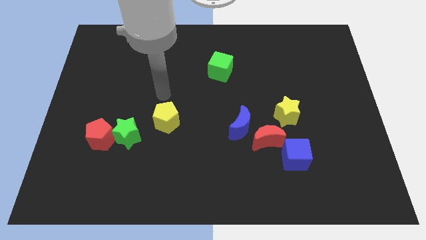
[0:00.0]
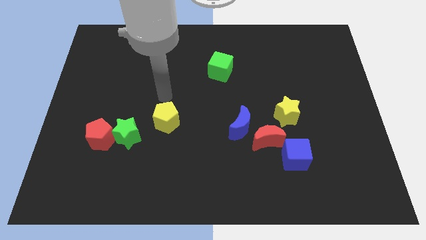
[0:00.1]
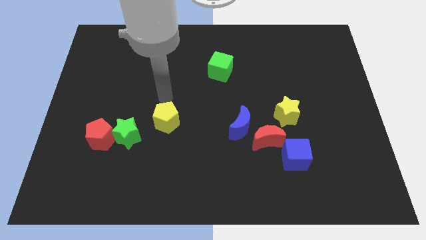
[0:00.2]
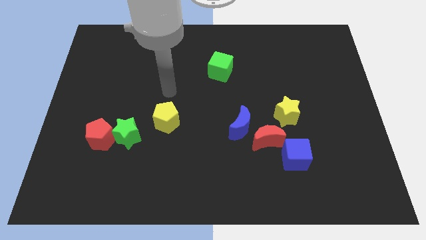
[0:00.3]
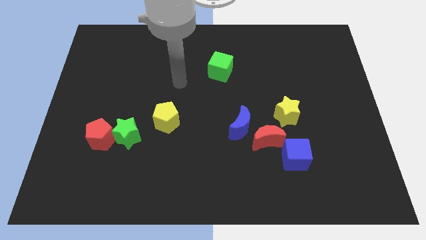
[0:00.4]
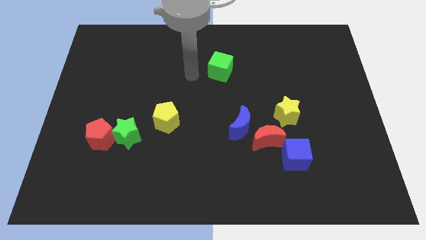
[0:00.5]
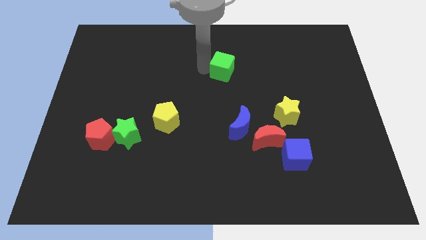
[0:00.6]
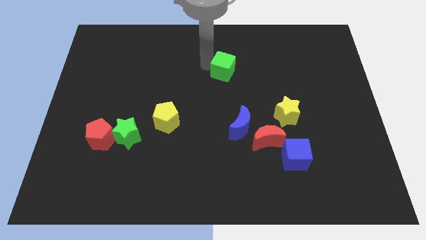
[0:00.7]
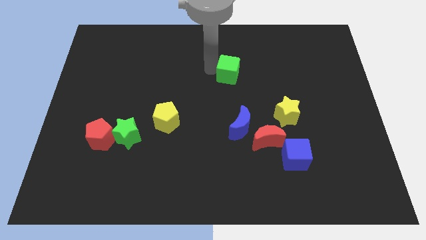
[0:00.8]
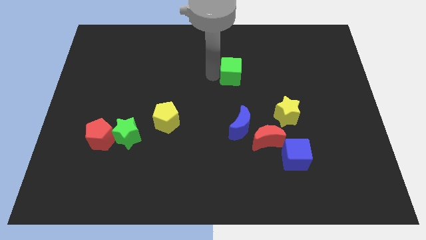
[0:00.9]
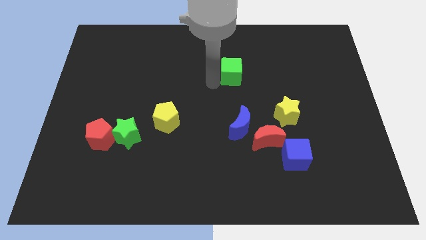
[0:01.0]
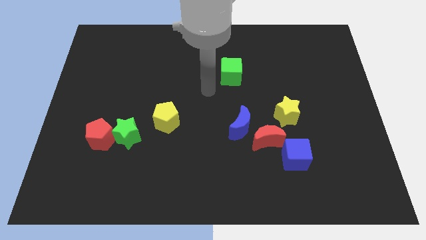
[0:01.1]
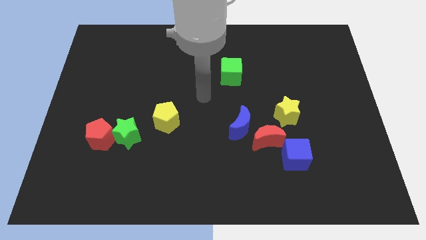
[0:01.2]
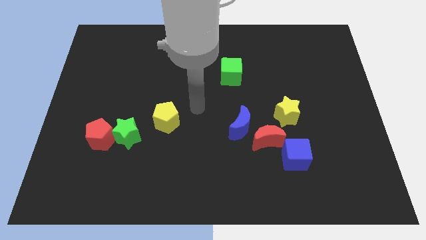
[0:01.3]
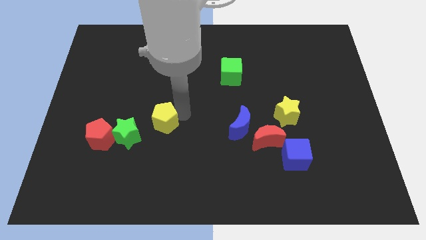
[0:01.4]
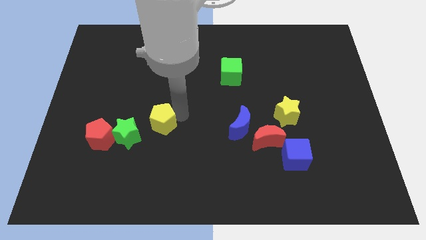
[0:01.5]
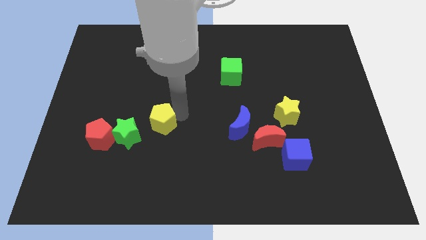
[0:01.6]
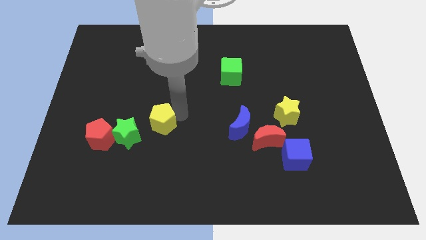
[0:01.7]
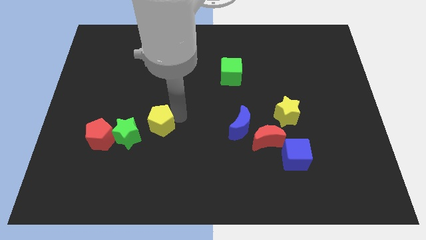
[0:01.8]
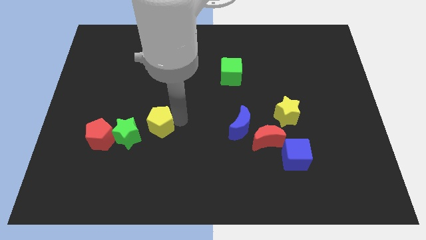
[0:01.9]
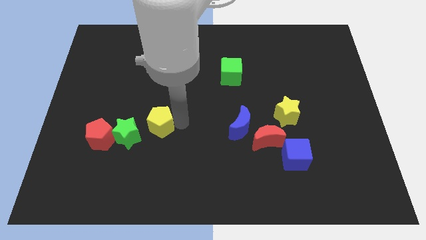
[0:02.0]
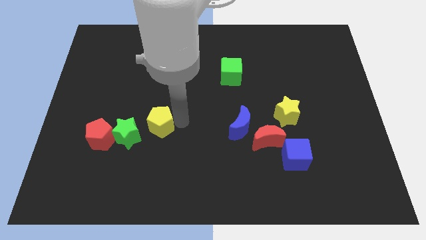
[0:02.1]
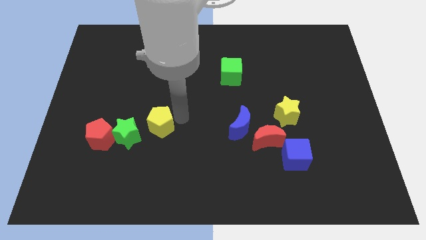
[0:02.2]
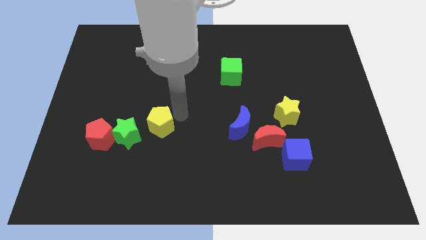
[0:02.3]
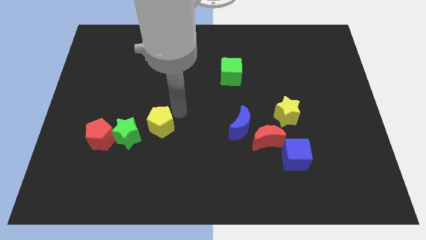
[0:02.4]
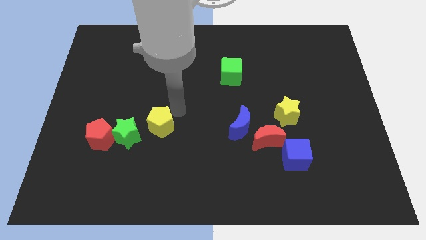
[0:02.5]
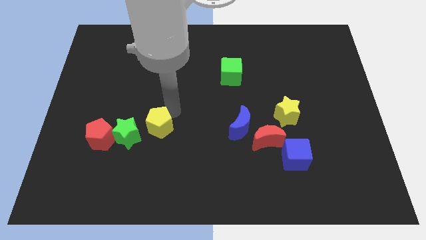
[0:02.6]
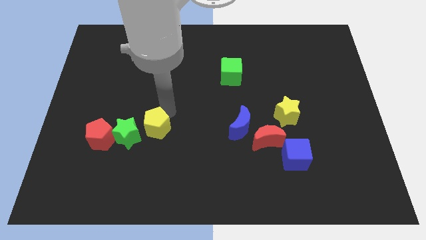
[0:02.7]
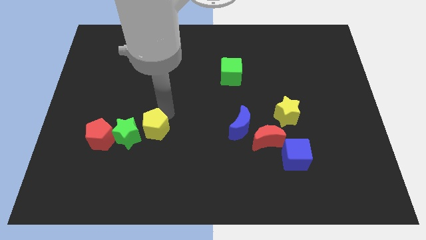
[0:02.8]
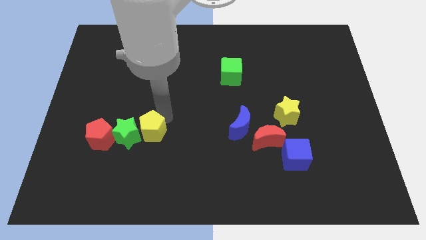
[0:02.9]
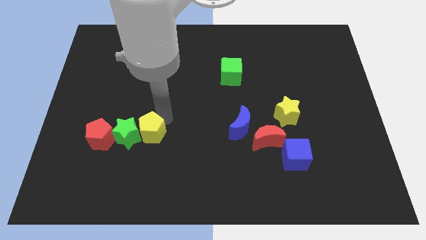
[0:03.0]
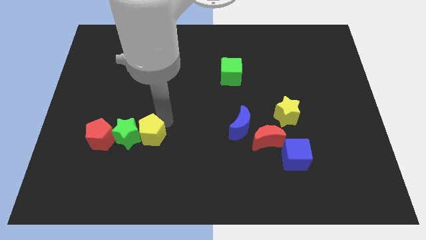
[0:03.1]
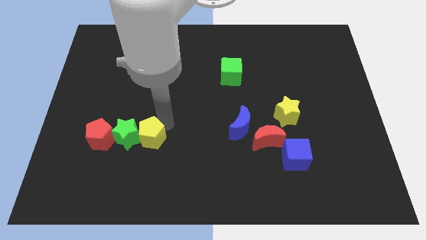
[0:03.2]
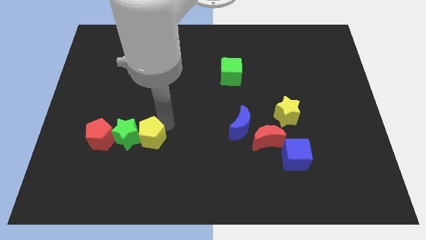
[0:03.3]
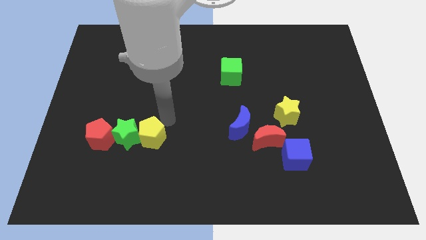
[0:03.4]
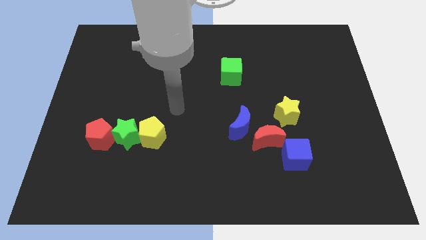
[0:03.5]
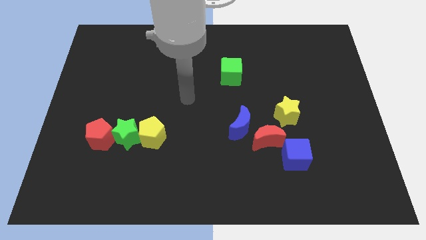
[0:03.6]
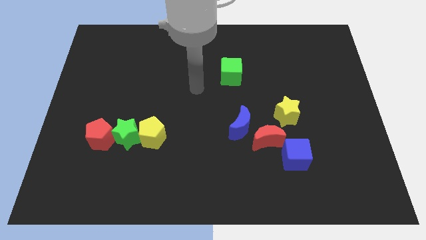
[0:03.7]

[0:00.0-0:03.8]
slide the yellow pentagon into the green star

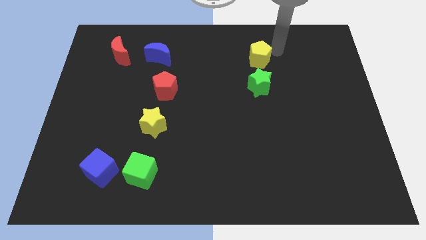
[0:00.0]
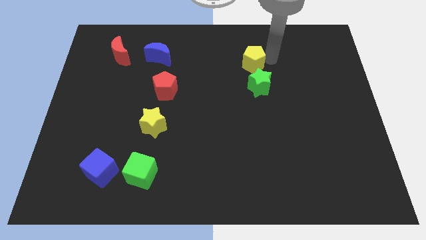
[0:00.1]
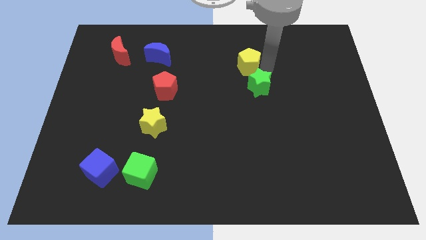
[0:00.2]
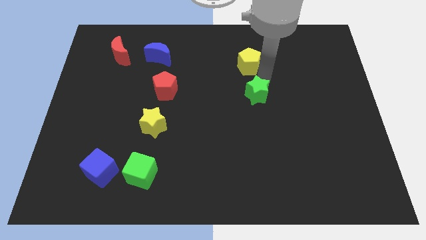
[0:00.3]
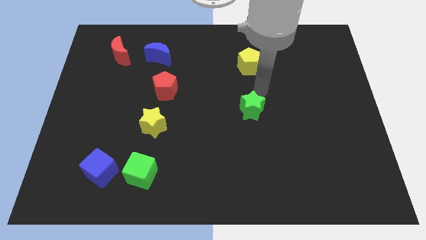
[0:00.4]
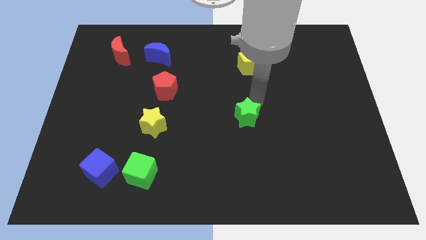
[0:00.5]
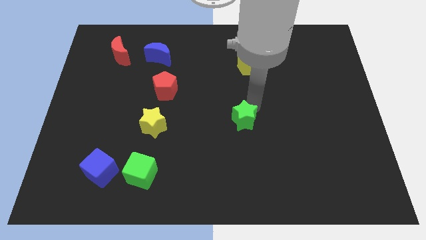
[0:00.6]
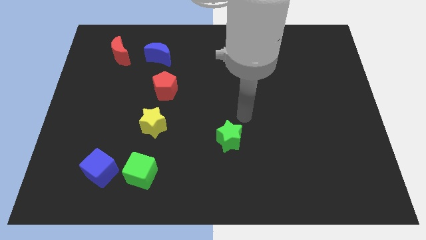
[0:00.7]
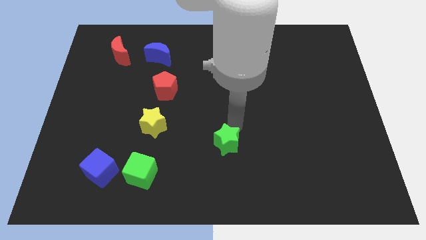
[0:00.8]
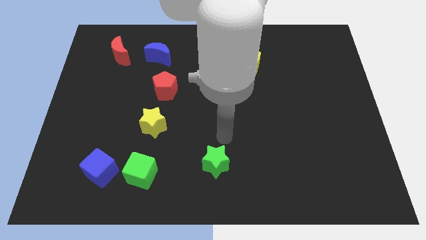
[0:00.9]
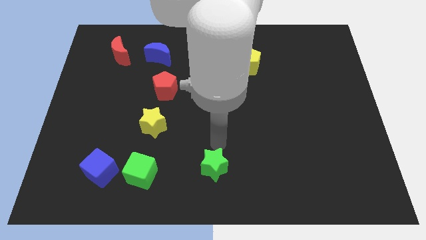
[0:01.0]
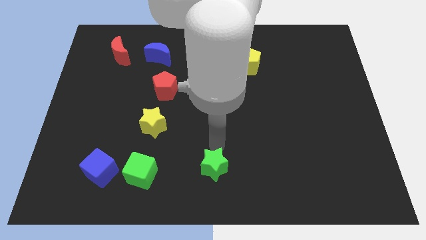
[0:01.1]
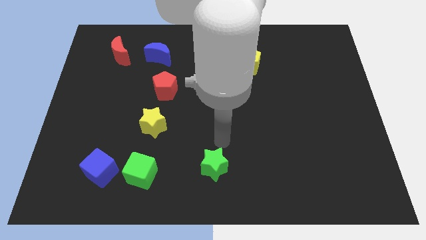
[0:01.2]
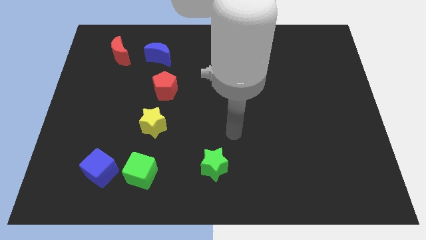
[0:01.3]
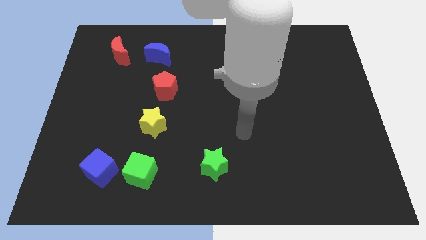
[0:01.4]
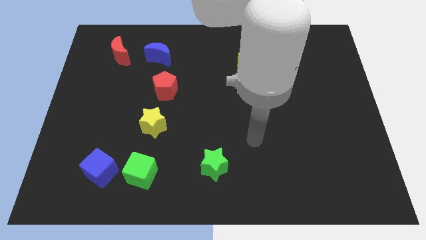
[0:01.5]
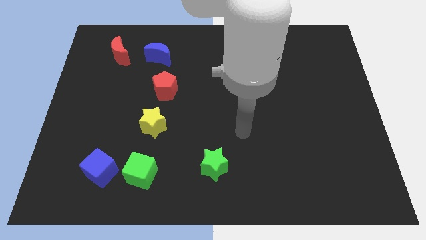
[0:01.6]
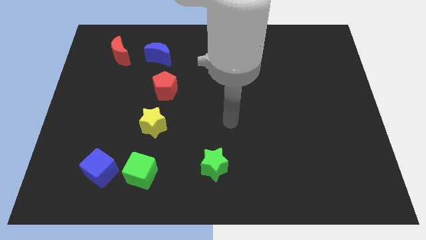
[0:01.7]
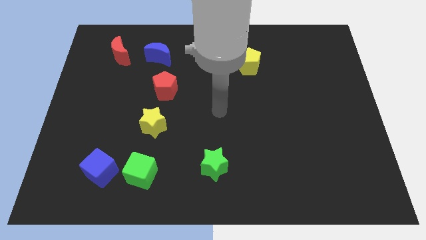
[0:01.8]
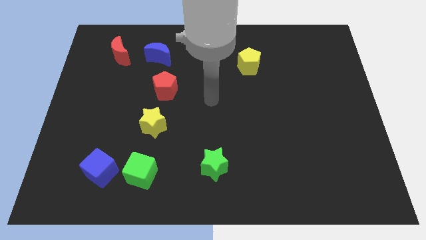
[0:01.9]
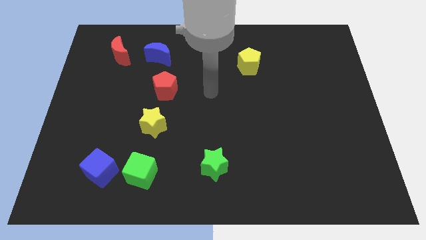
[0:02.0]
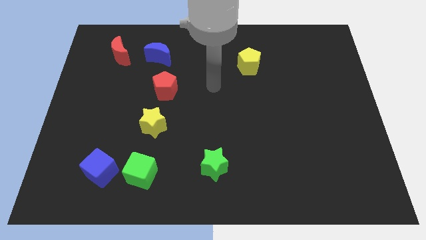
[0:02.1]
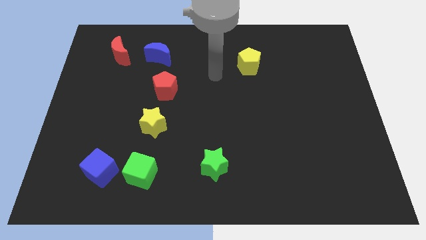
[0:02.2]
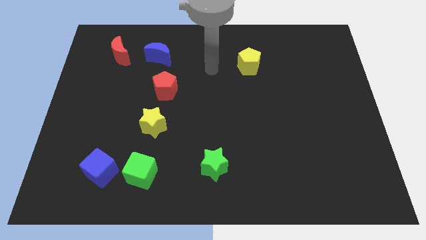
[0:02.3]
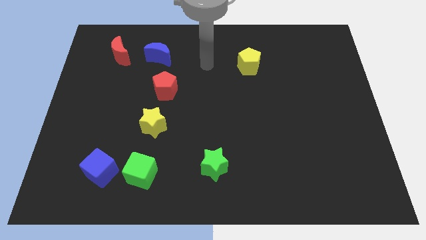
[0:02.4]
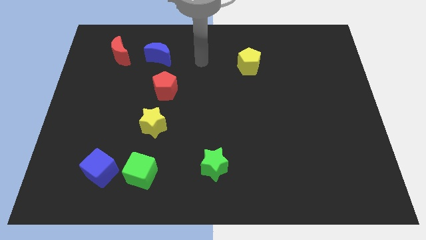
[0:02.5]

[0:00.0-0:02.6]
push the green star towards the bottom center of the board and go away

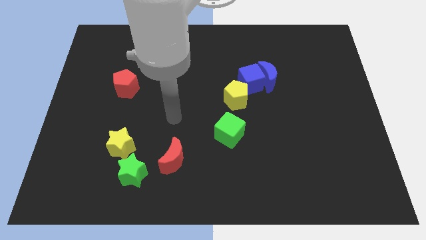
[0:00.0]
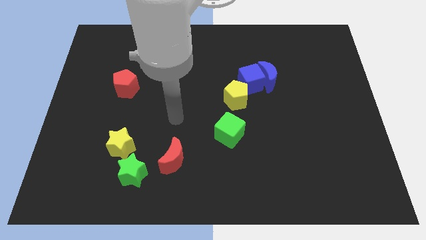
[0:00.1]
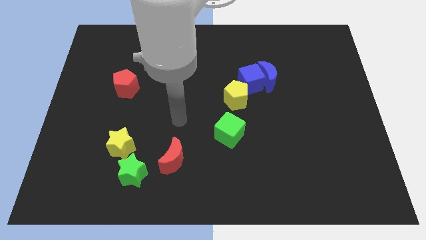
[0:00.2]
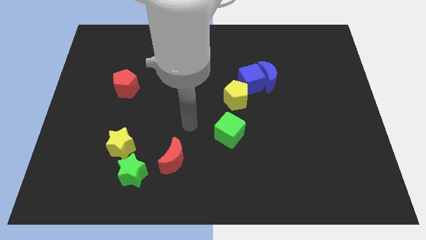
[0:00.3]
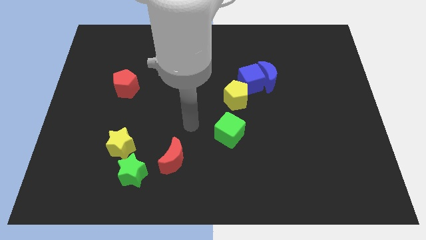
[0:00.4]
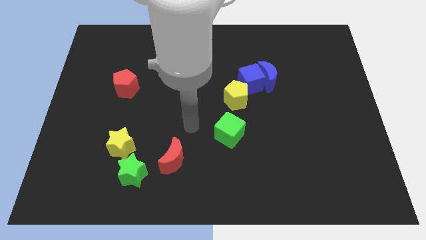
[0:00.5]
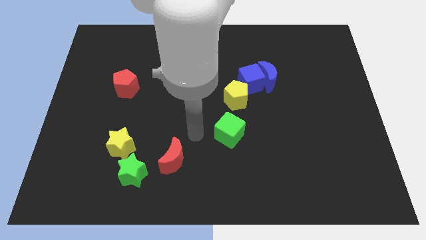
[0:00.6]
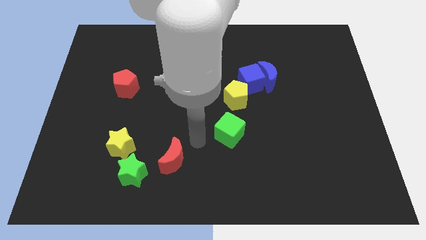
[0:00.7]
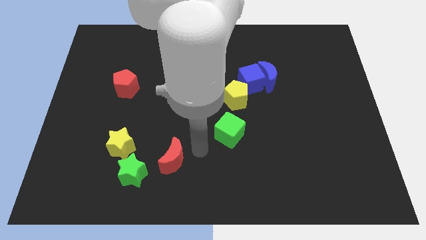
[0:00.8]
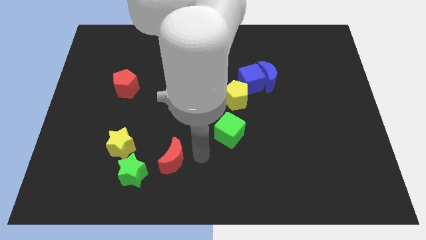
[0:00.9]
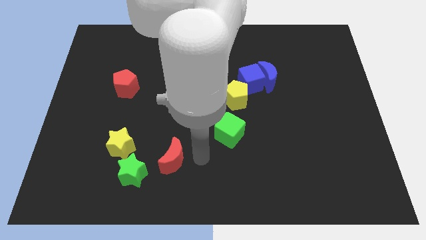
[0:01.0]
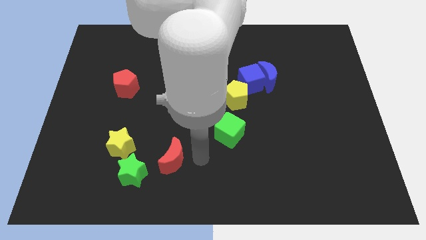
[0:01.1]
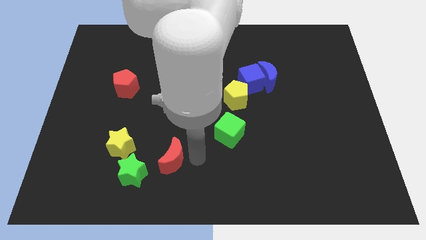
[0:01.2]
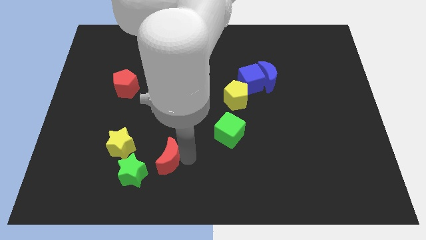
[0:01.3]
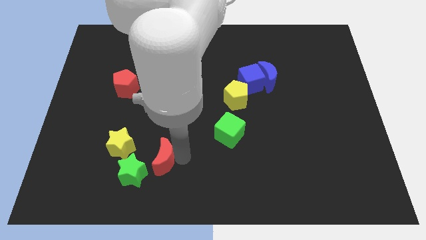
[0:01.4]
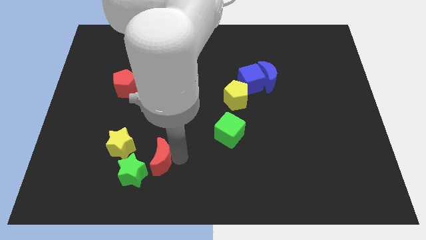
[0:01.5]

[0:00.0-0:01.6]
move your arm to the red moon

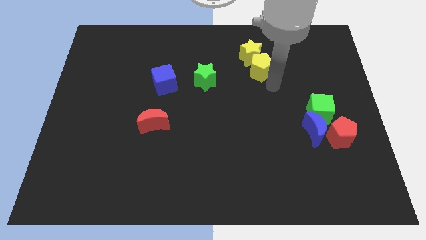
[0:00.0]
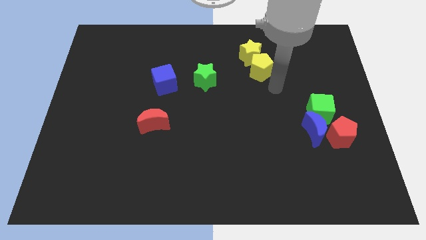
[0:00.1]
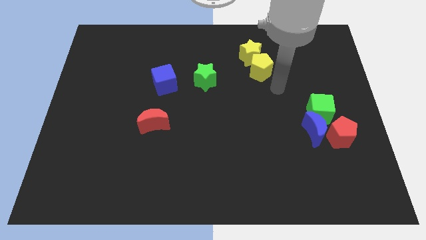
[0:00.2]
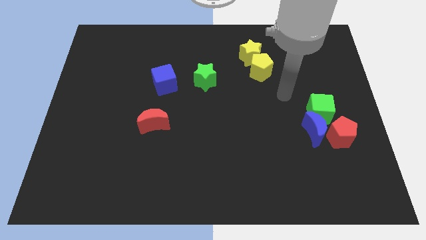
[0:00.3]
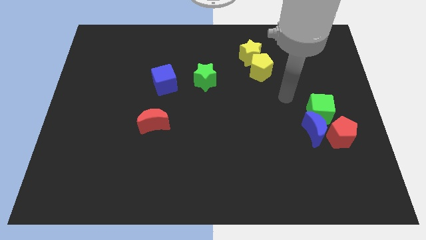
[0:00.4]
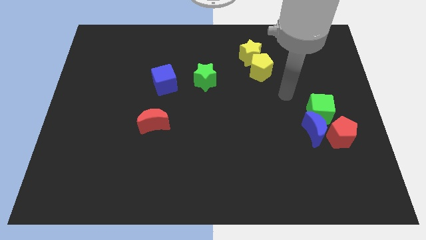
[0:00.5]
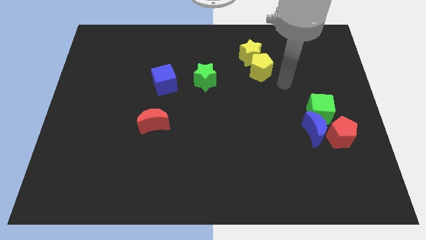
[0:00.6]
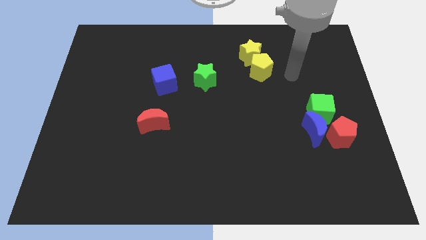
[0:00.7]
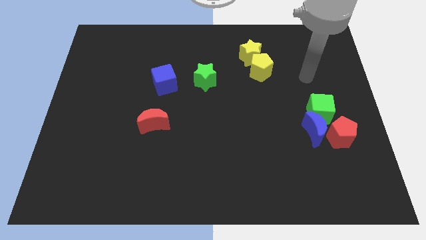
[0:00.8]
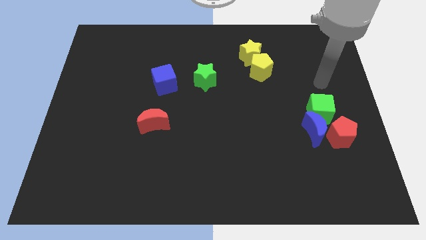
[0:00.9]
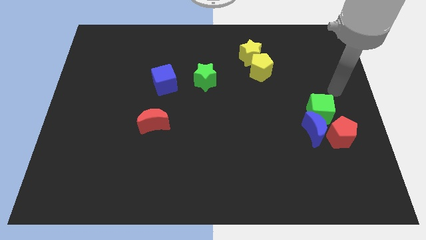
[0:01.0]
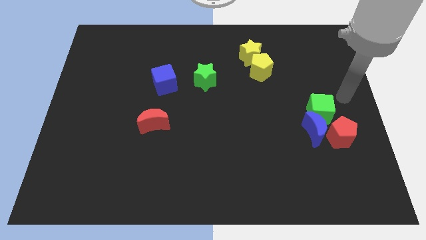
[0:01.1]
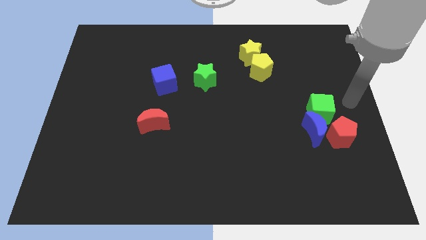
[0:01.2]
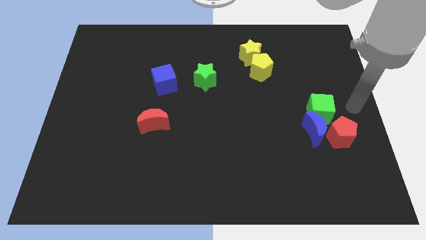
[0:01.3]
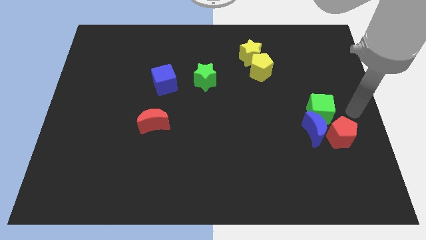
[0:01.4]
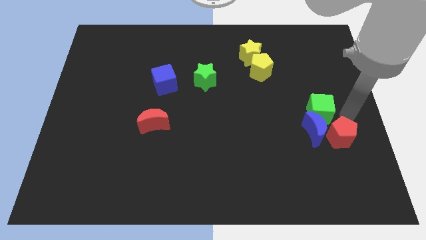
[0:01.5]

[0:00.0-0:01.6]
move your arm towards the center right
